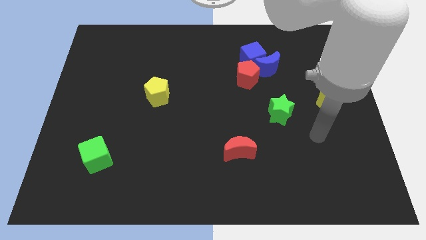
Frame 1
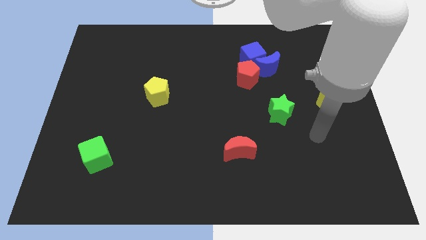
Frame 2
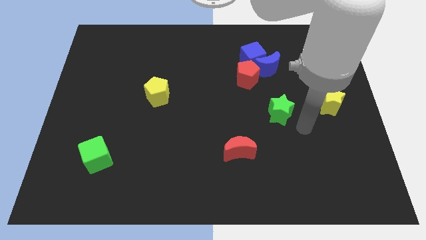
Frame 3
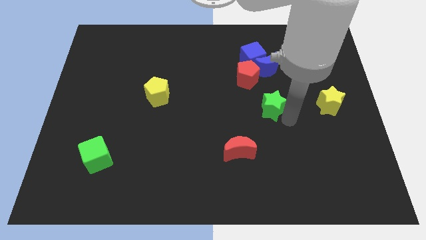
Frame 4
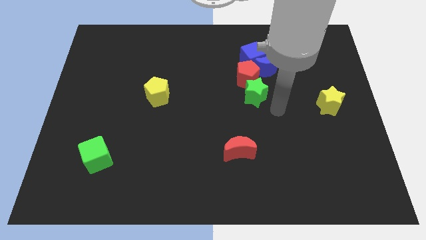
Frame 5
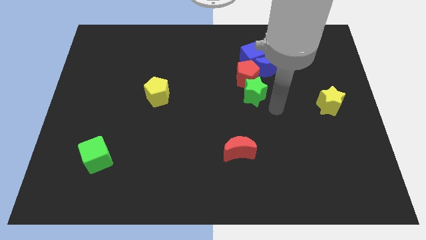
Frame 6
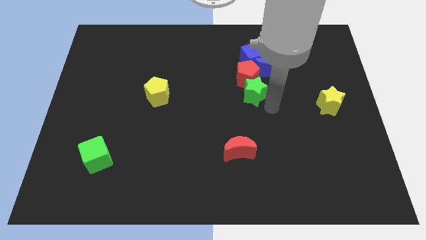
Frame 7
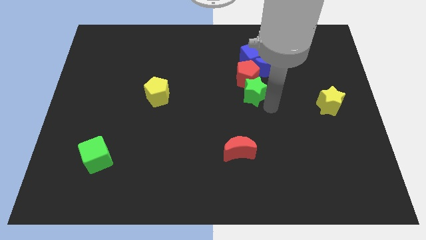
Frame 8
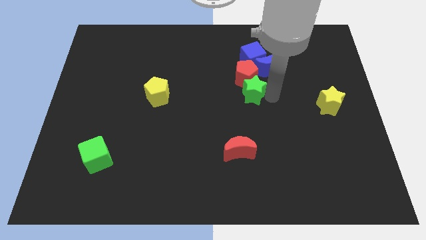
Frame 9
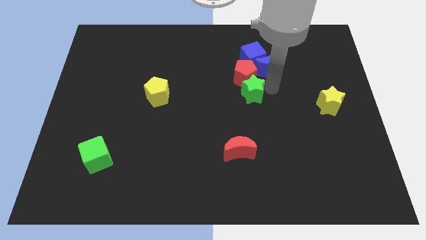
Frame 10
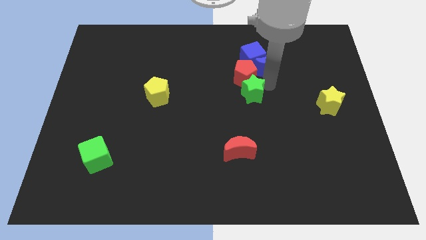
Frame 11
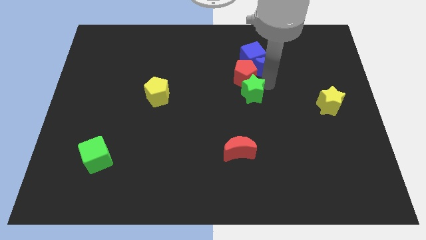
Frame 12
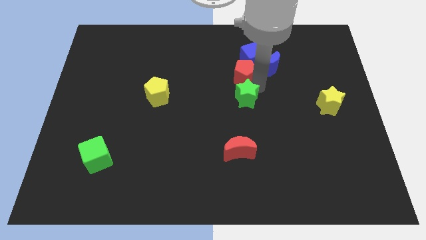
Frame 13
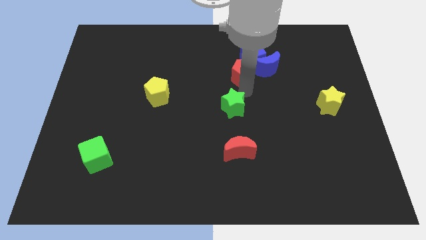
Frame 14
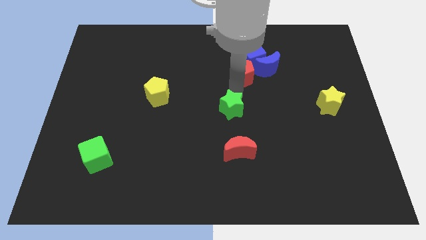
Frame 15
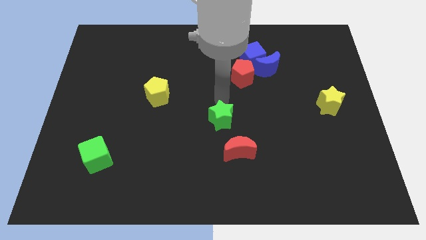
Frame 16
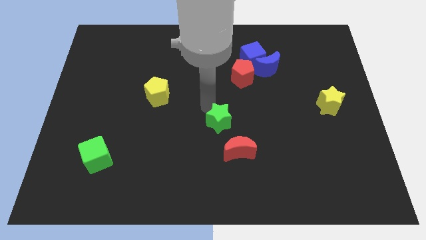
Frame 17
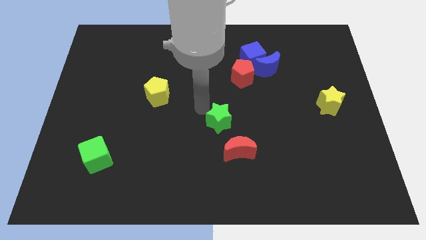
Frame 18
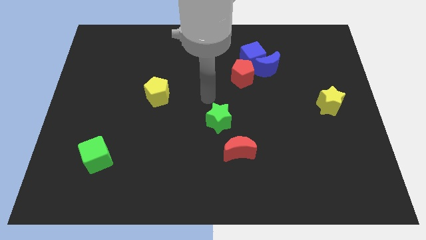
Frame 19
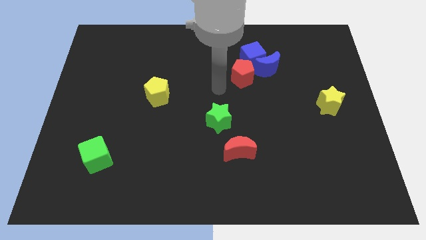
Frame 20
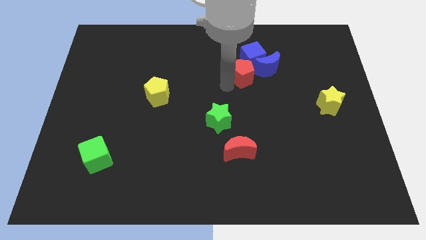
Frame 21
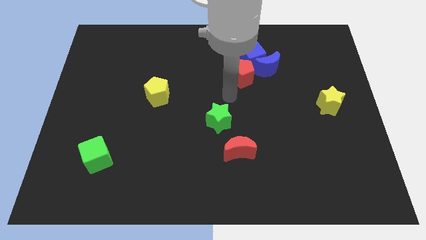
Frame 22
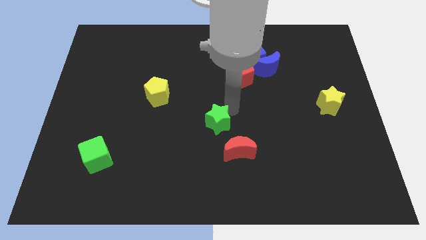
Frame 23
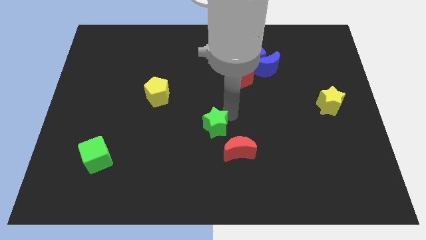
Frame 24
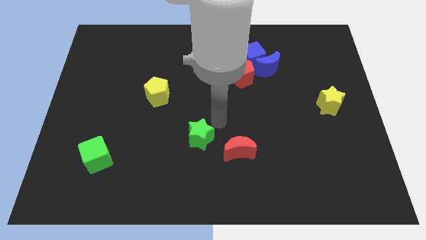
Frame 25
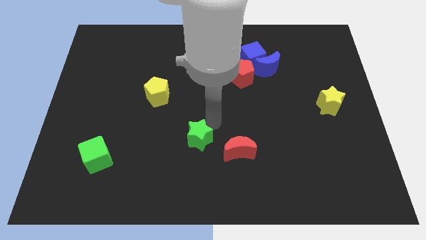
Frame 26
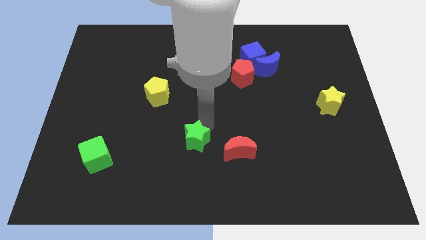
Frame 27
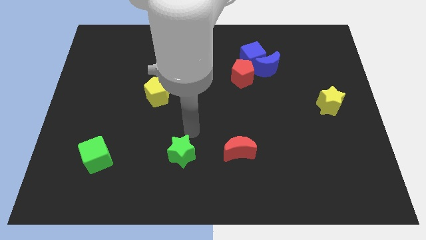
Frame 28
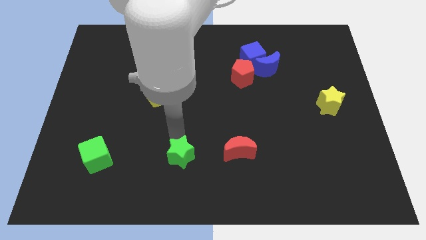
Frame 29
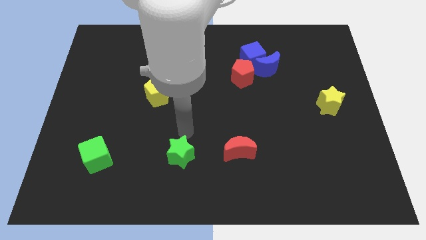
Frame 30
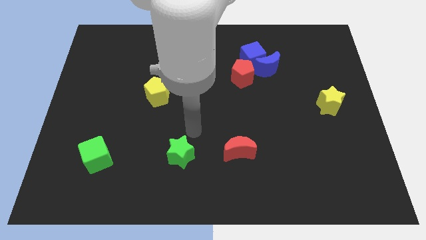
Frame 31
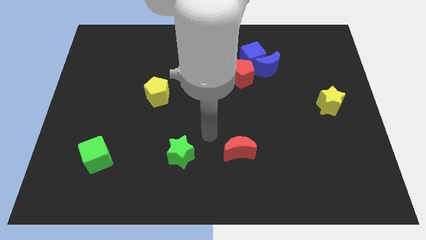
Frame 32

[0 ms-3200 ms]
put the green star between red moon and green cube

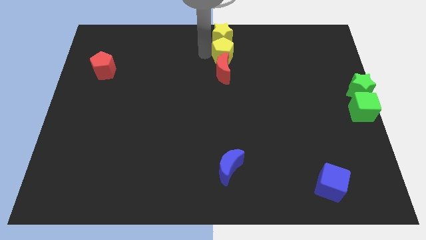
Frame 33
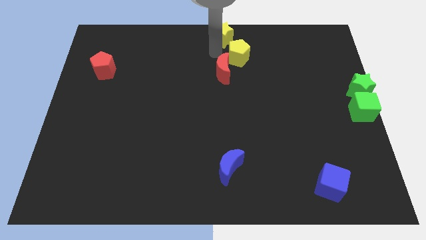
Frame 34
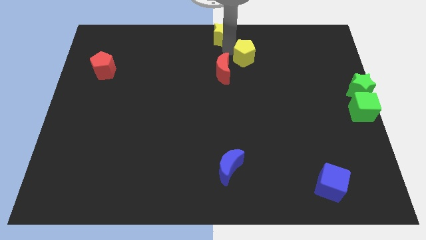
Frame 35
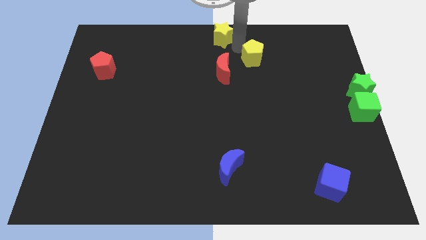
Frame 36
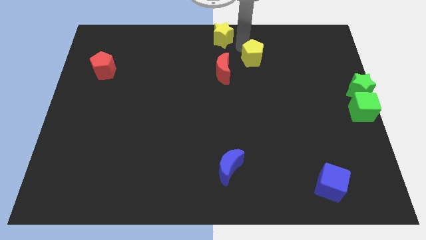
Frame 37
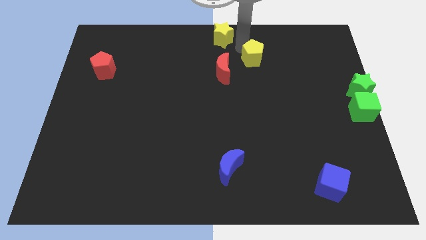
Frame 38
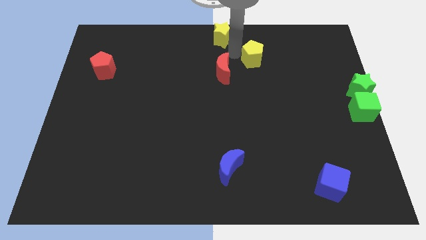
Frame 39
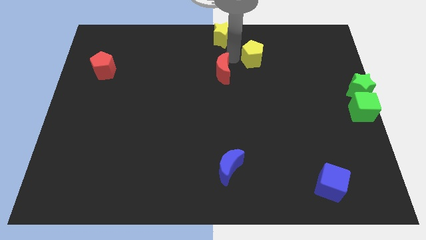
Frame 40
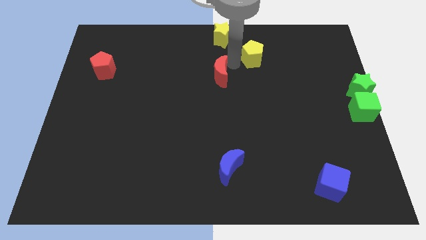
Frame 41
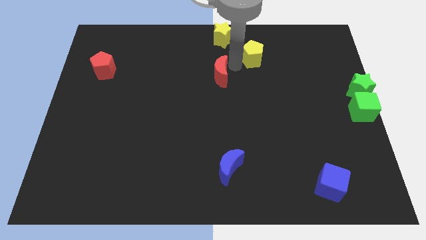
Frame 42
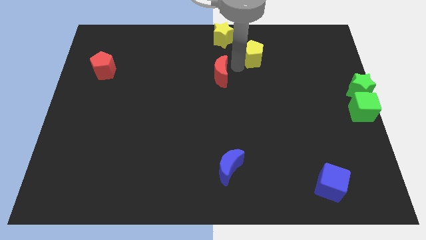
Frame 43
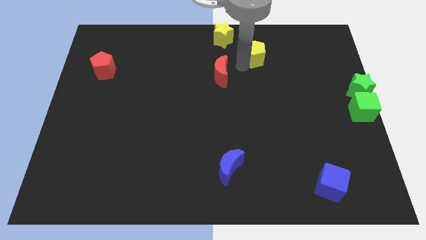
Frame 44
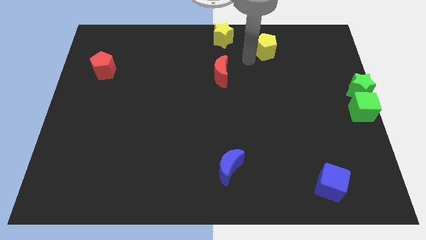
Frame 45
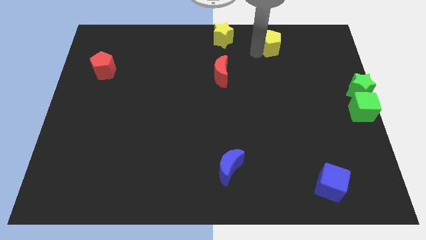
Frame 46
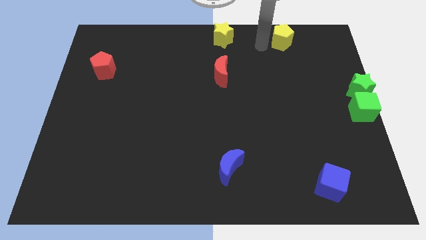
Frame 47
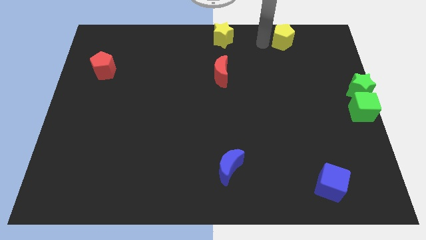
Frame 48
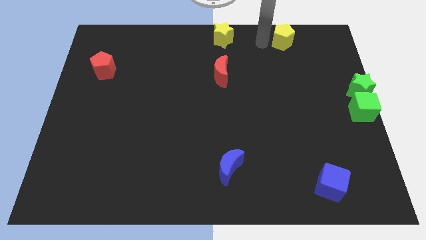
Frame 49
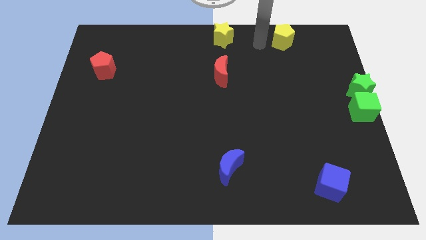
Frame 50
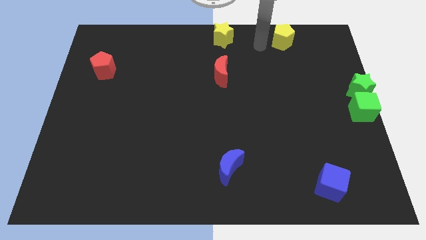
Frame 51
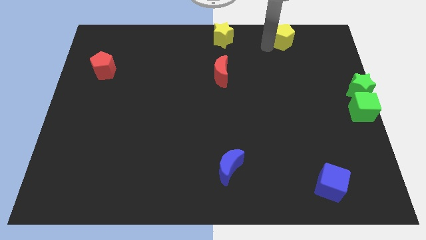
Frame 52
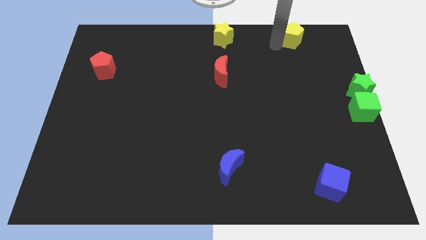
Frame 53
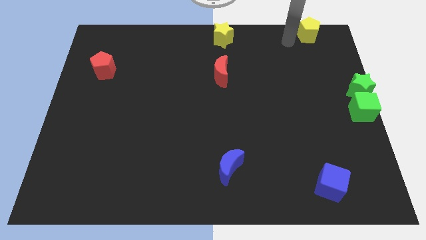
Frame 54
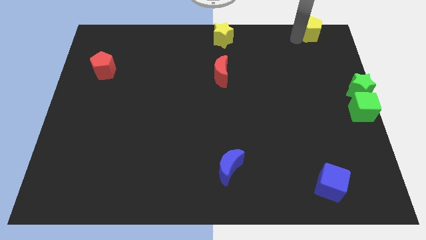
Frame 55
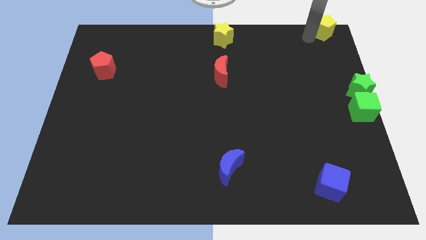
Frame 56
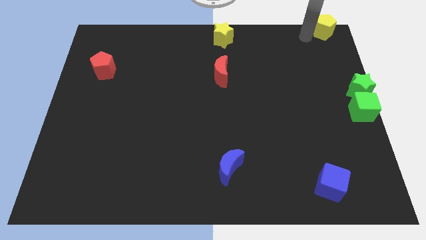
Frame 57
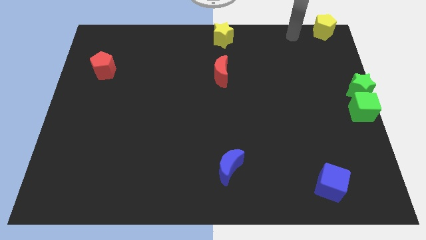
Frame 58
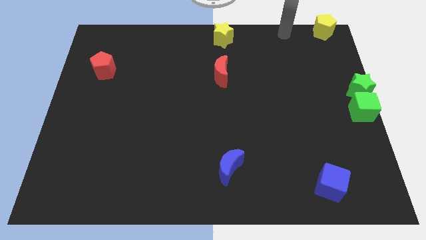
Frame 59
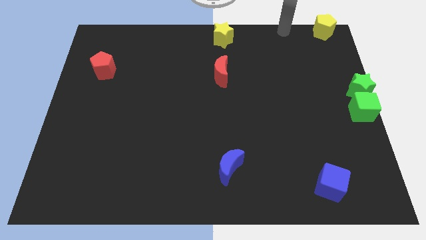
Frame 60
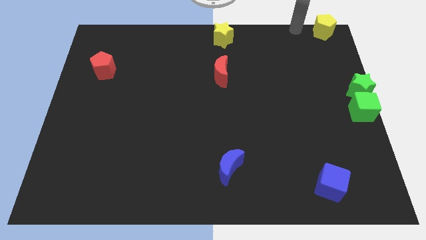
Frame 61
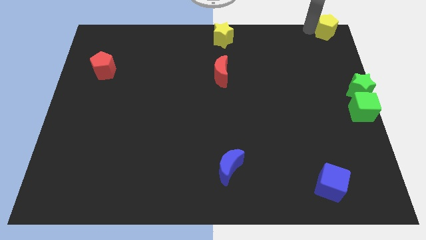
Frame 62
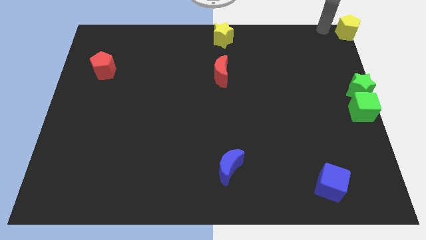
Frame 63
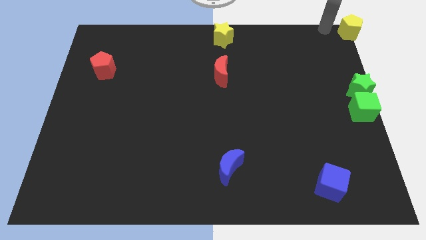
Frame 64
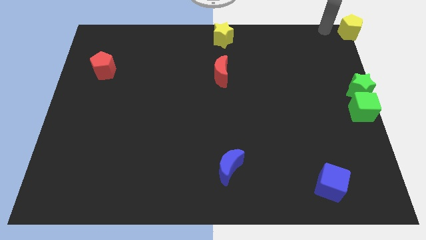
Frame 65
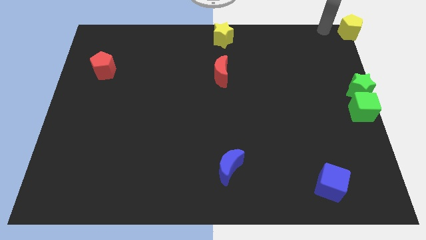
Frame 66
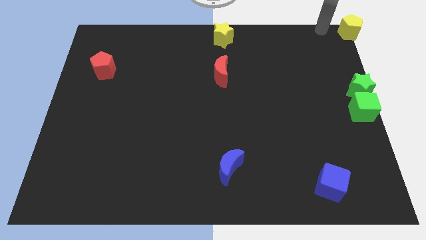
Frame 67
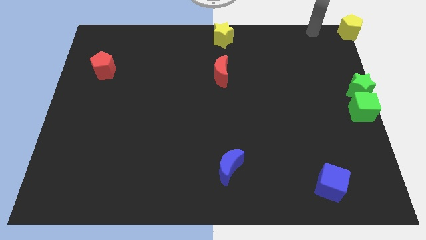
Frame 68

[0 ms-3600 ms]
move the yellow pentagon to the top right corner

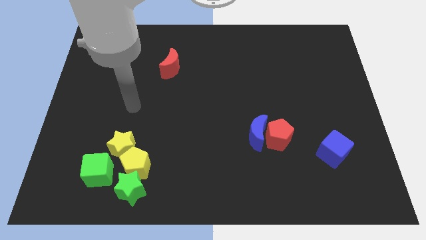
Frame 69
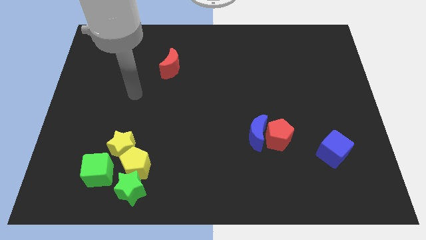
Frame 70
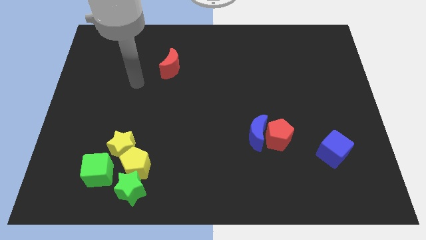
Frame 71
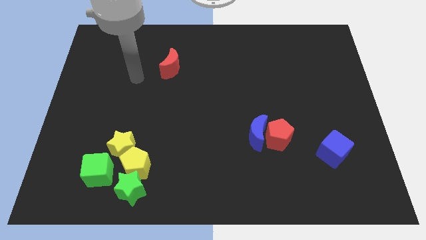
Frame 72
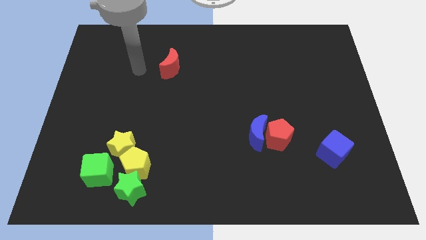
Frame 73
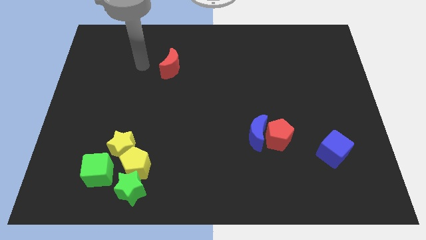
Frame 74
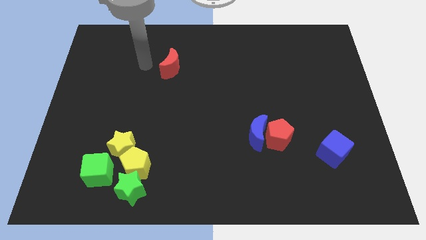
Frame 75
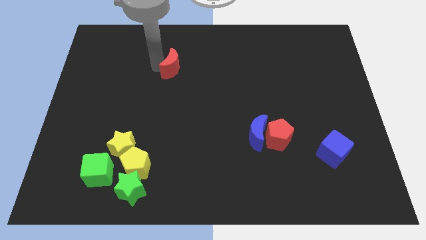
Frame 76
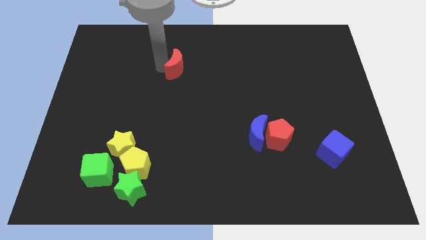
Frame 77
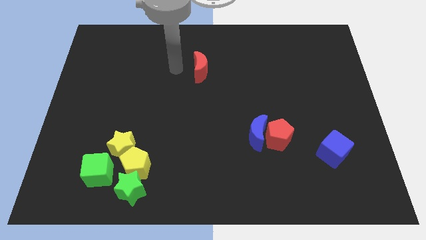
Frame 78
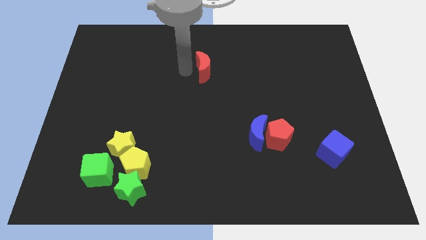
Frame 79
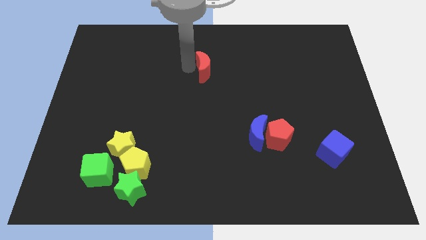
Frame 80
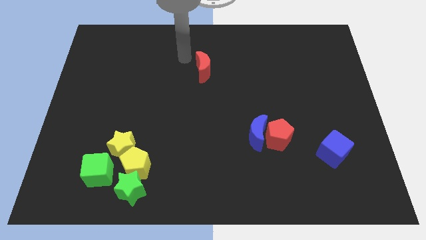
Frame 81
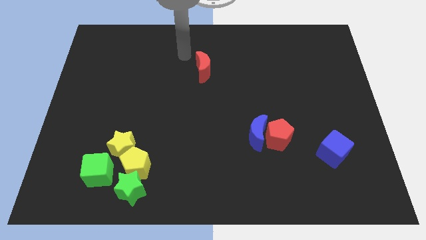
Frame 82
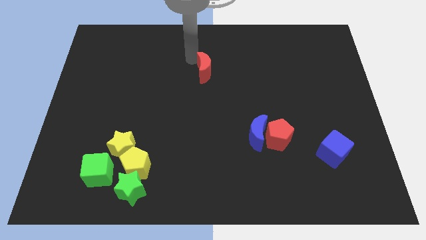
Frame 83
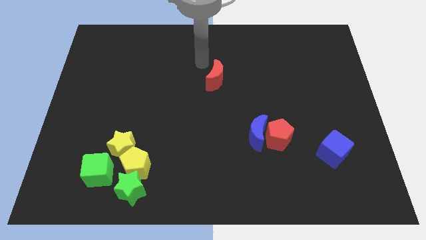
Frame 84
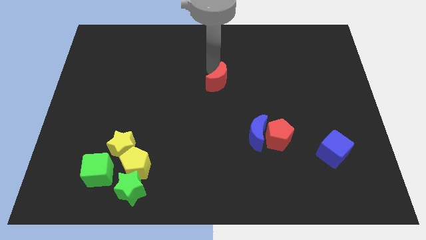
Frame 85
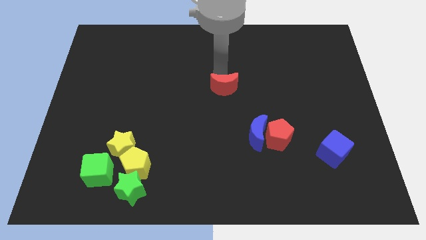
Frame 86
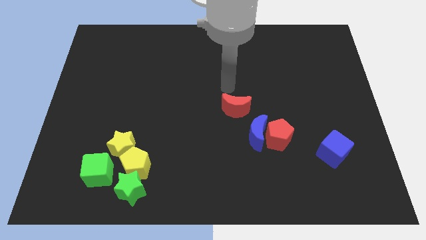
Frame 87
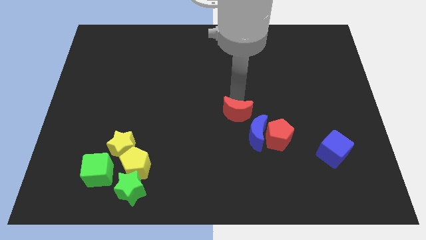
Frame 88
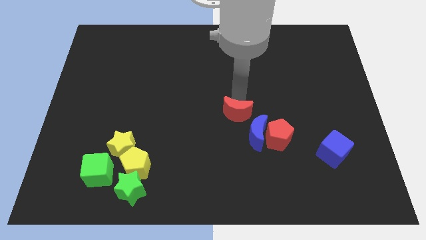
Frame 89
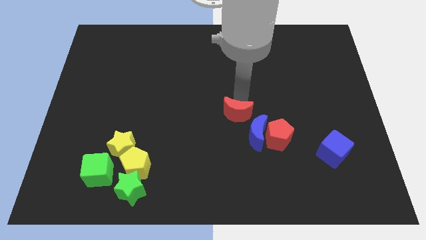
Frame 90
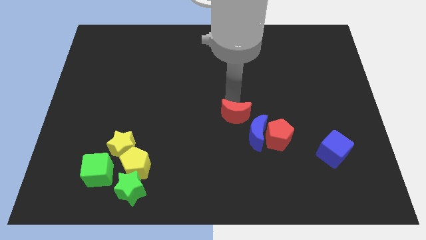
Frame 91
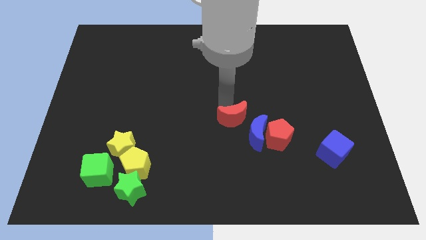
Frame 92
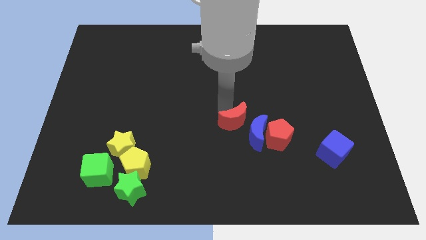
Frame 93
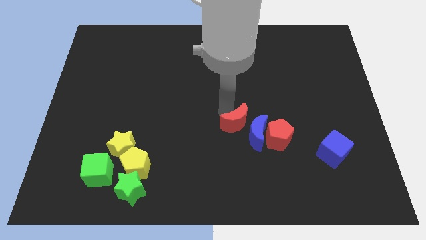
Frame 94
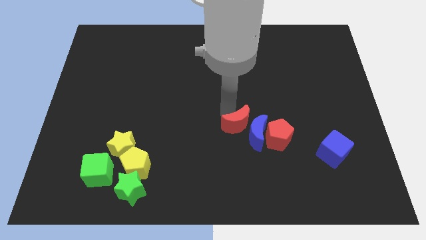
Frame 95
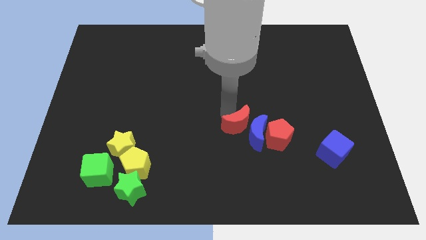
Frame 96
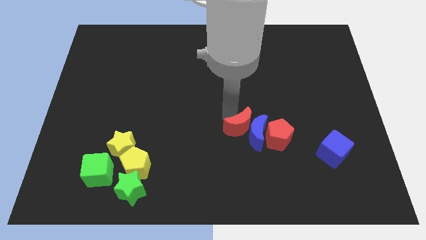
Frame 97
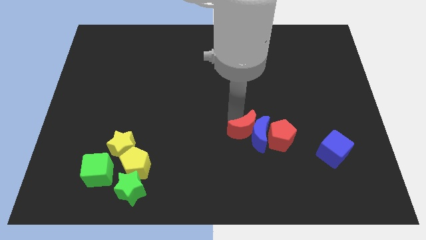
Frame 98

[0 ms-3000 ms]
push the red crescent to the left of the blue crescent
